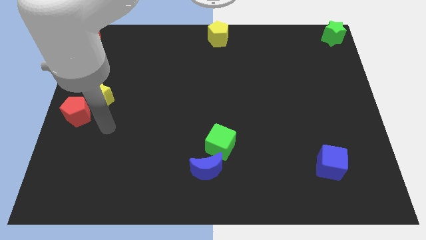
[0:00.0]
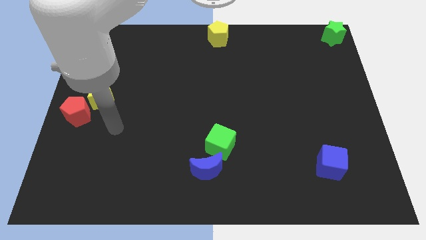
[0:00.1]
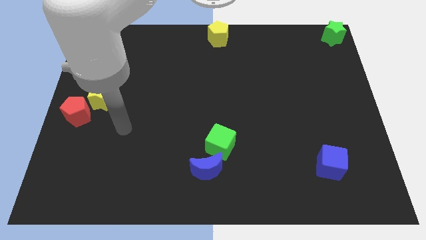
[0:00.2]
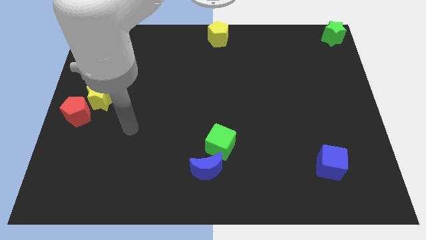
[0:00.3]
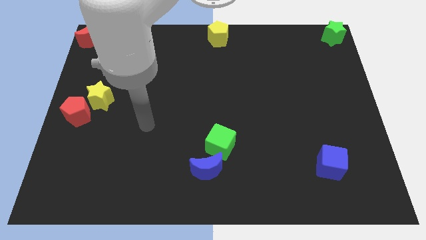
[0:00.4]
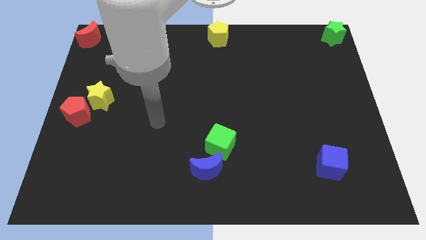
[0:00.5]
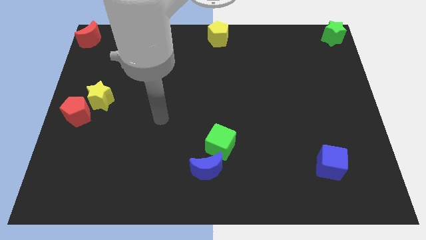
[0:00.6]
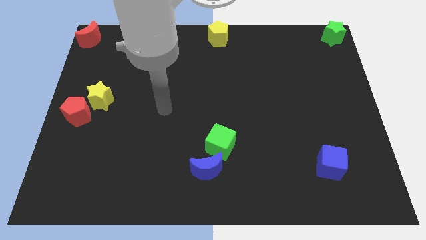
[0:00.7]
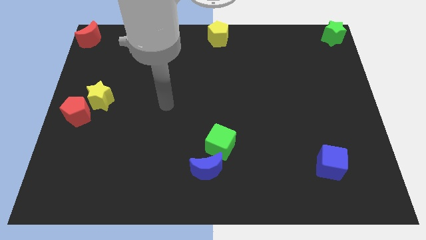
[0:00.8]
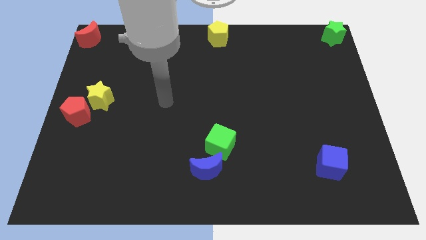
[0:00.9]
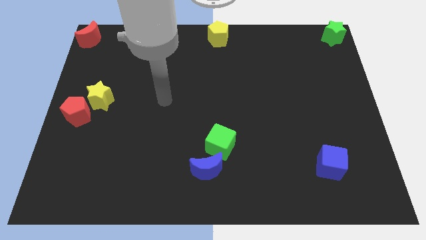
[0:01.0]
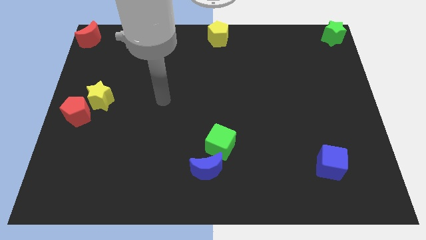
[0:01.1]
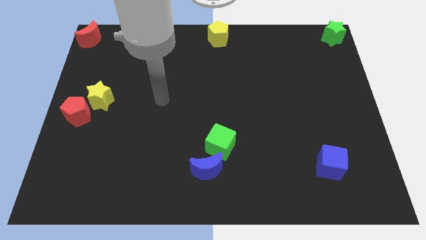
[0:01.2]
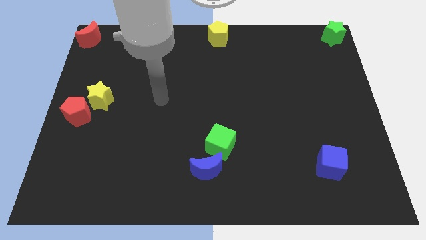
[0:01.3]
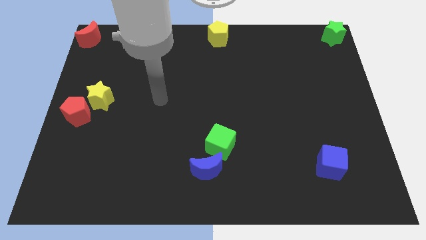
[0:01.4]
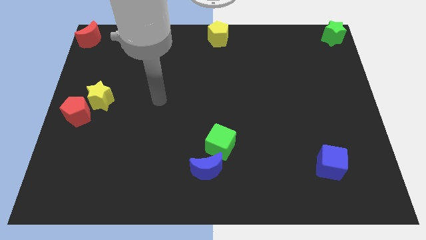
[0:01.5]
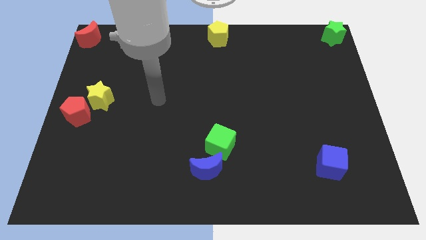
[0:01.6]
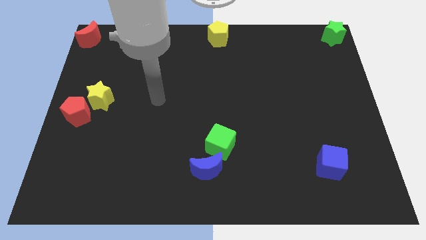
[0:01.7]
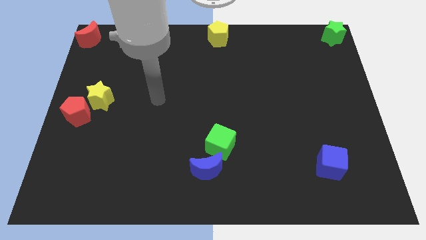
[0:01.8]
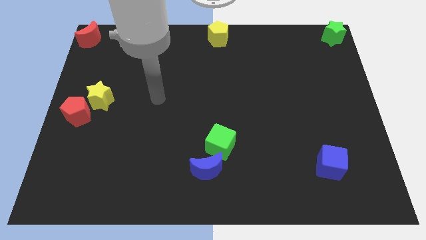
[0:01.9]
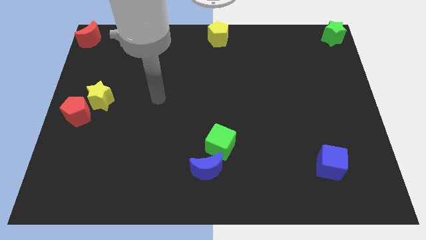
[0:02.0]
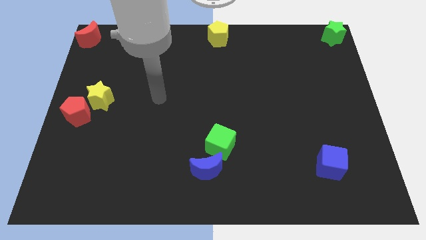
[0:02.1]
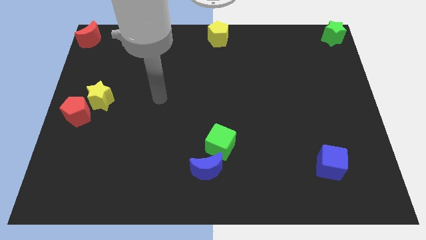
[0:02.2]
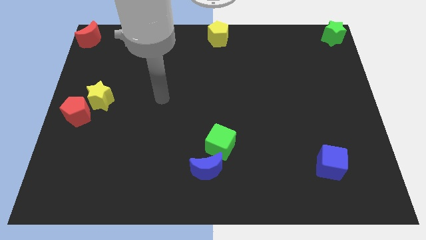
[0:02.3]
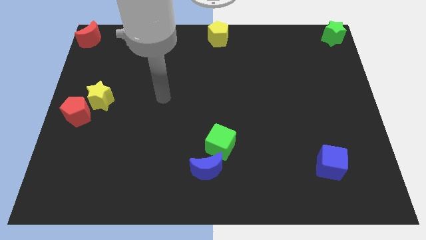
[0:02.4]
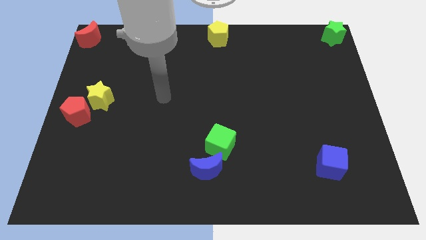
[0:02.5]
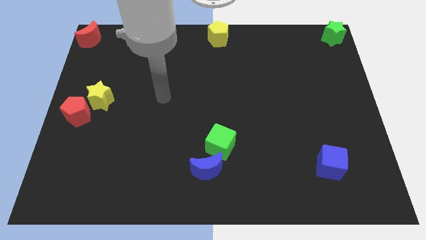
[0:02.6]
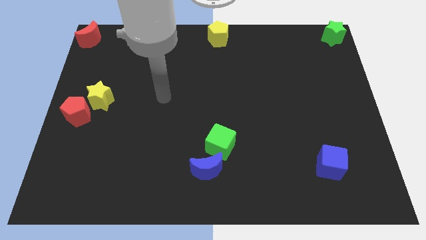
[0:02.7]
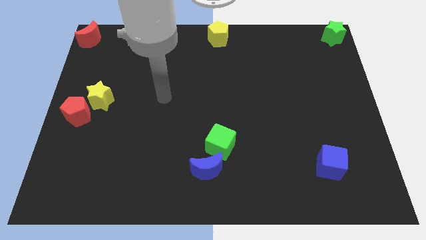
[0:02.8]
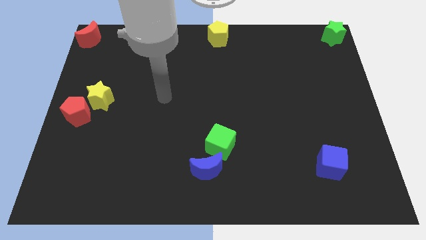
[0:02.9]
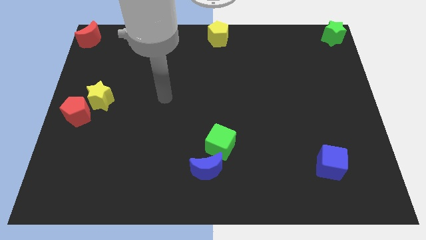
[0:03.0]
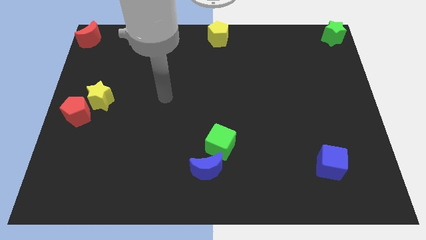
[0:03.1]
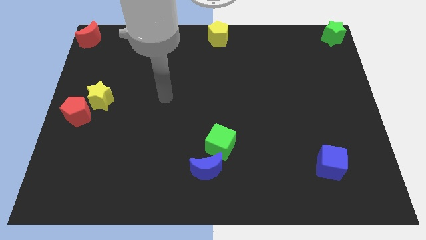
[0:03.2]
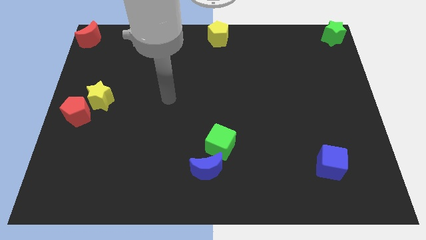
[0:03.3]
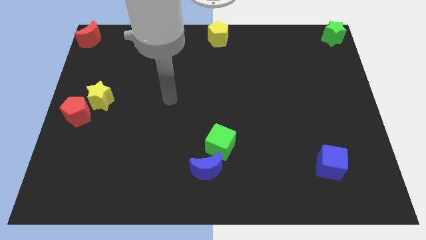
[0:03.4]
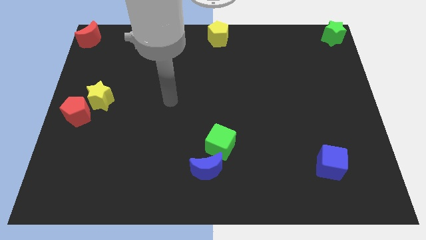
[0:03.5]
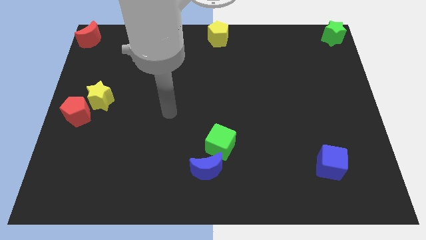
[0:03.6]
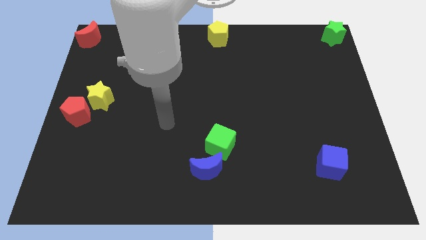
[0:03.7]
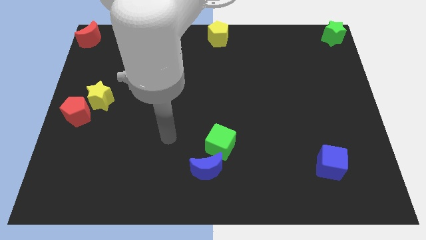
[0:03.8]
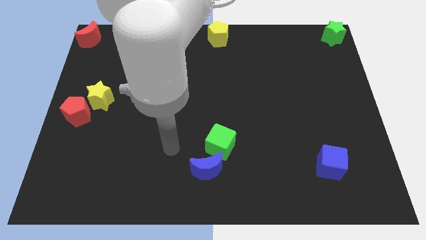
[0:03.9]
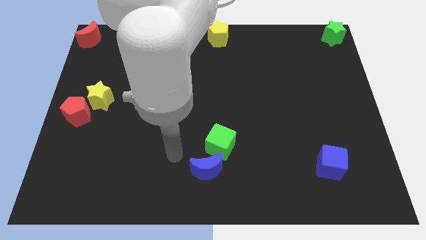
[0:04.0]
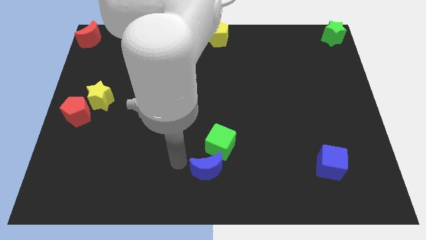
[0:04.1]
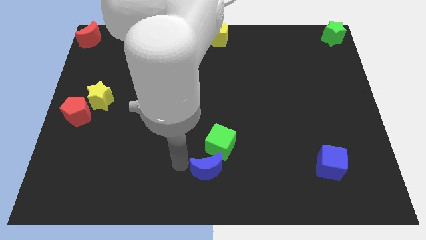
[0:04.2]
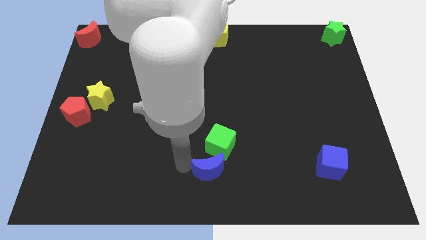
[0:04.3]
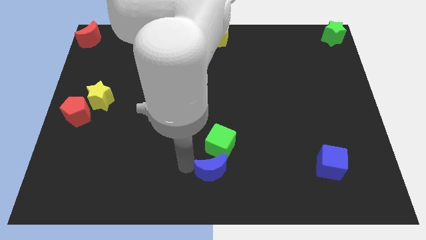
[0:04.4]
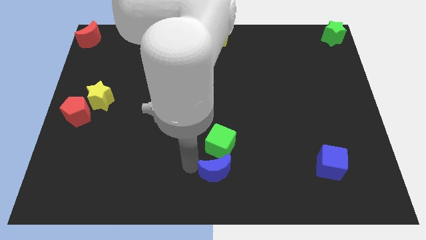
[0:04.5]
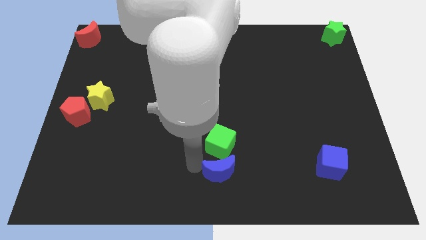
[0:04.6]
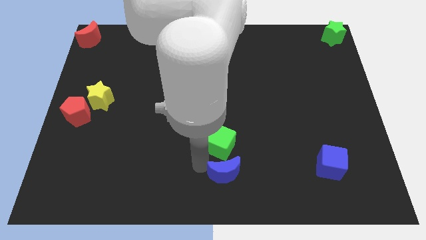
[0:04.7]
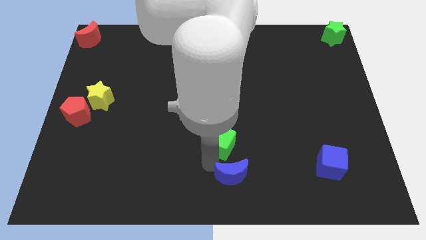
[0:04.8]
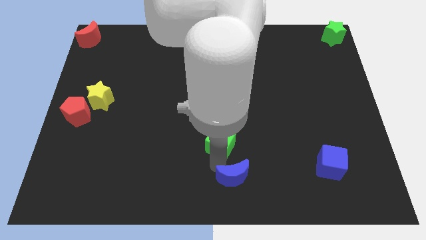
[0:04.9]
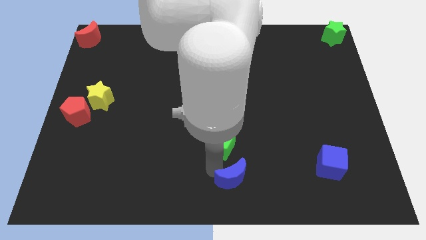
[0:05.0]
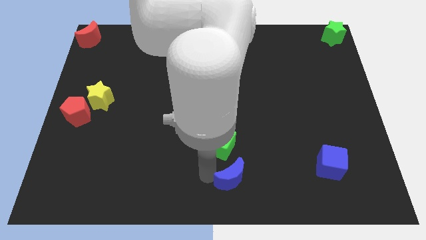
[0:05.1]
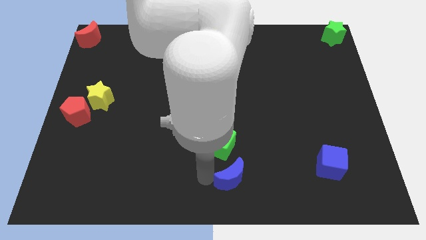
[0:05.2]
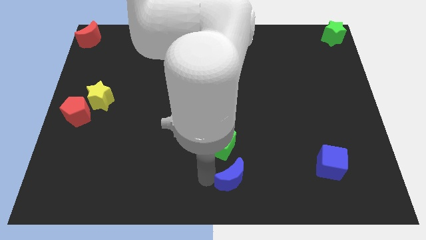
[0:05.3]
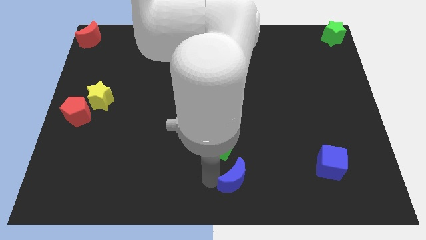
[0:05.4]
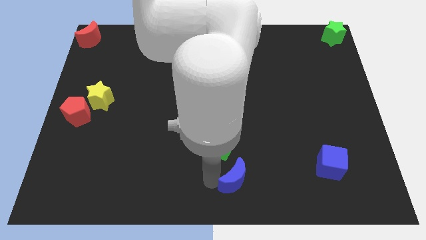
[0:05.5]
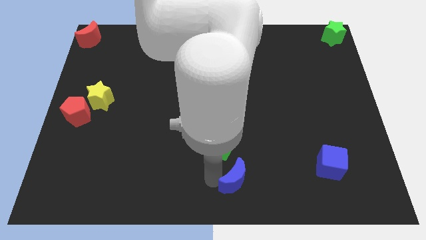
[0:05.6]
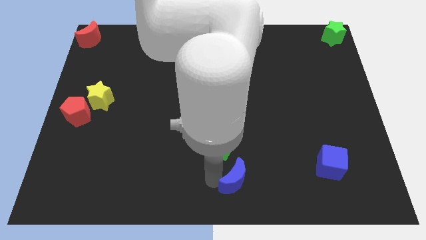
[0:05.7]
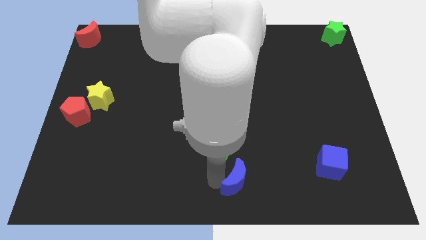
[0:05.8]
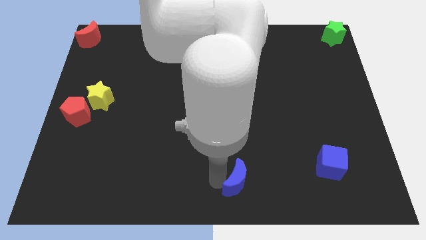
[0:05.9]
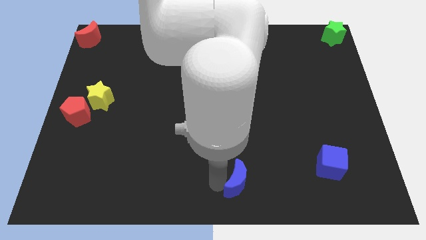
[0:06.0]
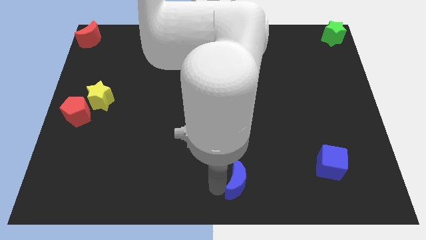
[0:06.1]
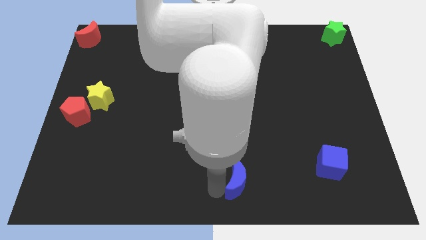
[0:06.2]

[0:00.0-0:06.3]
separate the red moon from the green cube

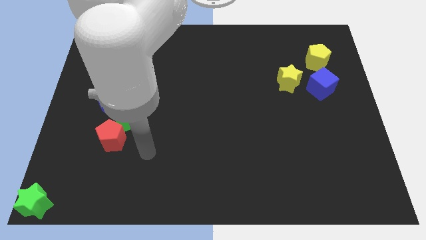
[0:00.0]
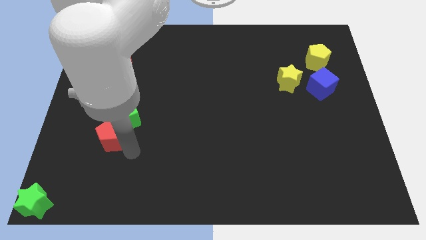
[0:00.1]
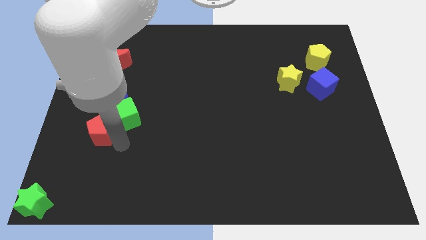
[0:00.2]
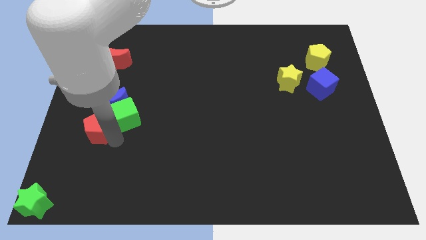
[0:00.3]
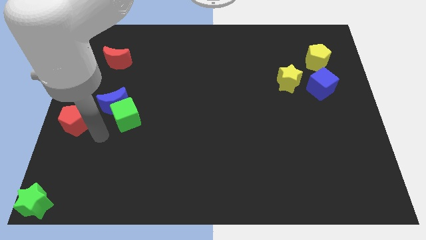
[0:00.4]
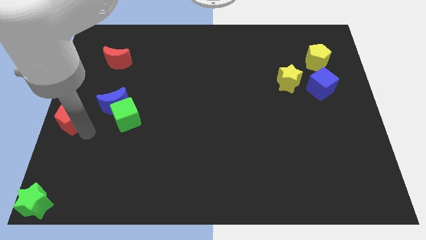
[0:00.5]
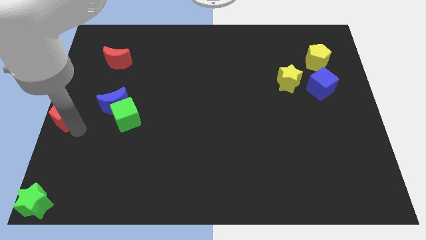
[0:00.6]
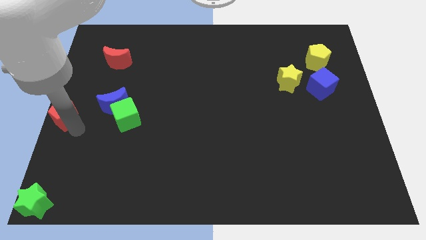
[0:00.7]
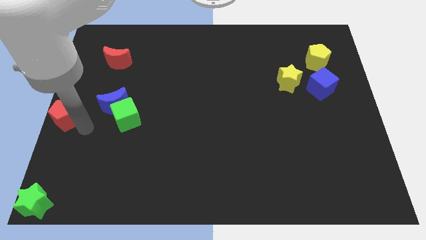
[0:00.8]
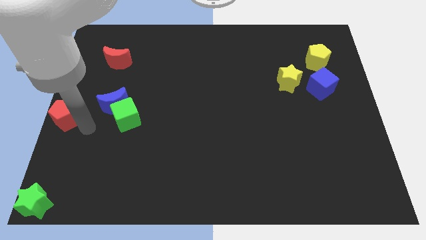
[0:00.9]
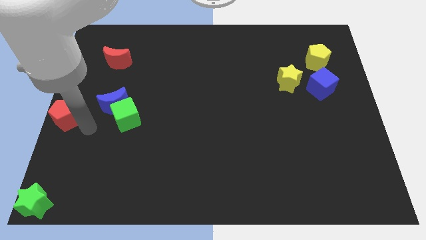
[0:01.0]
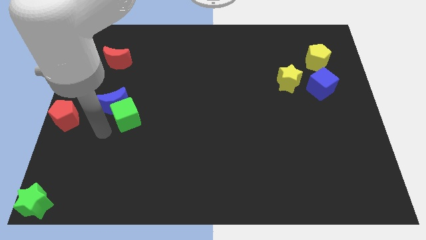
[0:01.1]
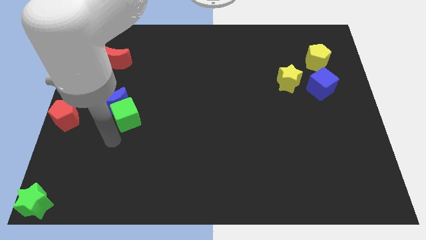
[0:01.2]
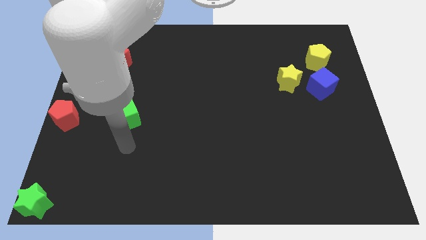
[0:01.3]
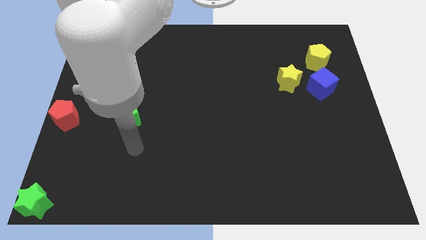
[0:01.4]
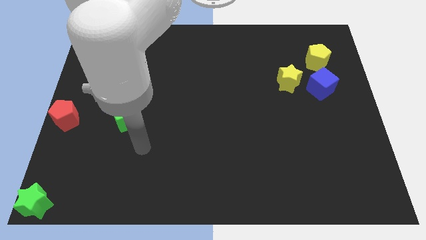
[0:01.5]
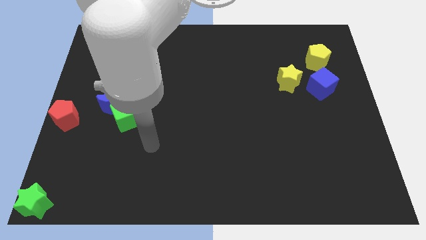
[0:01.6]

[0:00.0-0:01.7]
push the red pentagon to the left center

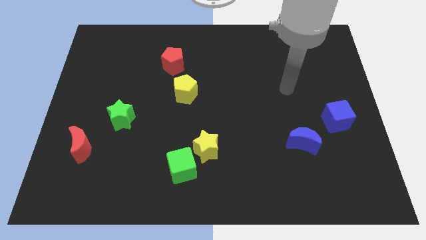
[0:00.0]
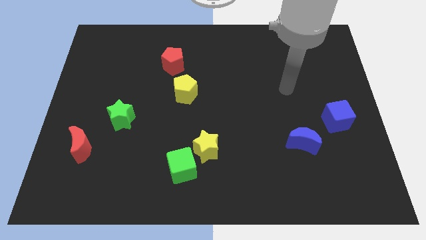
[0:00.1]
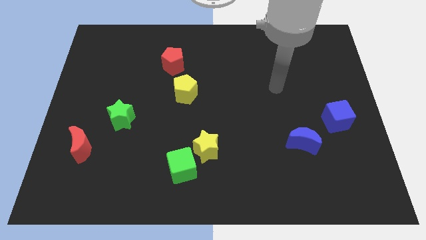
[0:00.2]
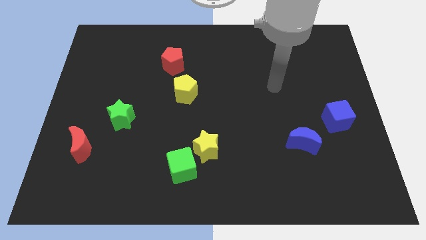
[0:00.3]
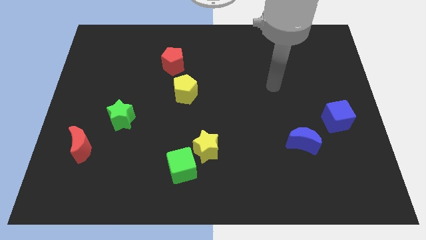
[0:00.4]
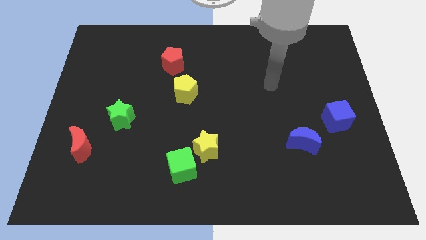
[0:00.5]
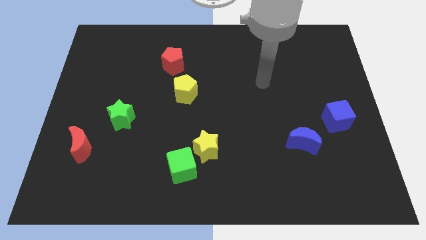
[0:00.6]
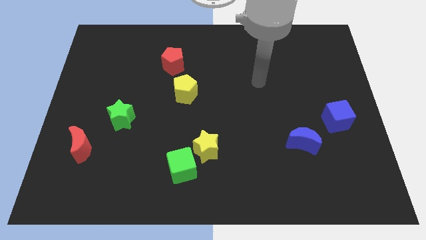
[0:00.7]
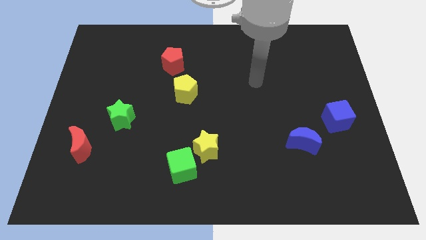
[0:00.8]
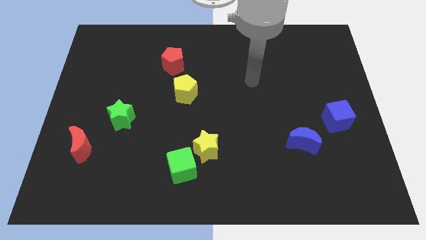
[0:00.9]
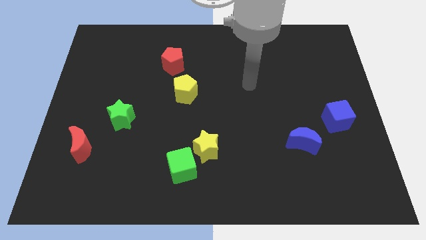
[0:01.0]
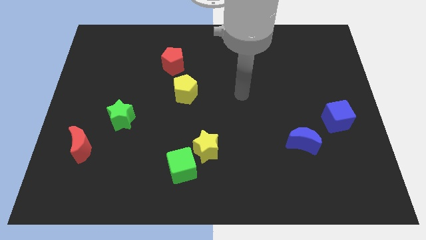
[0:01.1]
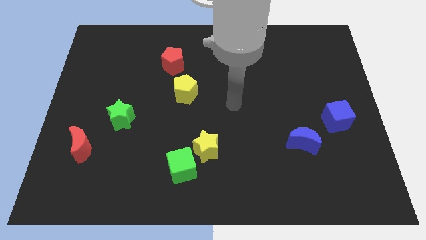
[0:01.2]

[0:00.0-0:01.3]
move the arm towards the center of the board
